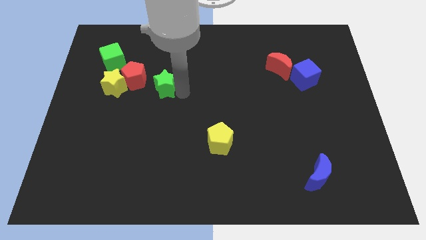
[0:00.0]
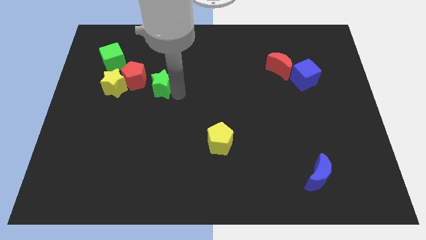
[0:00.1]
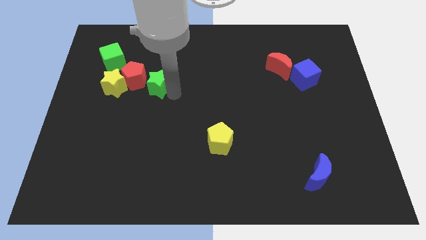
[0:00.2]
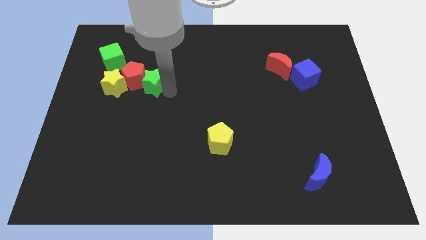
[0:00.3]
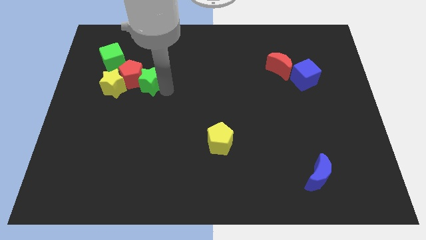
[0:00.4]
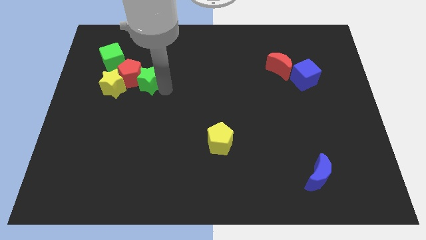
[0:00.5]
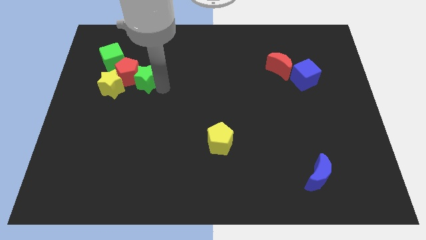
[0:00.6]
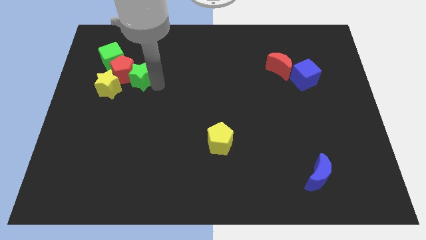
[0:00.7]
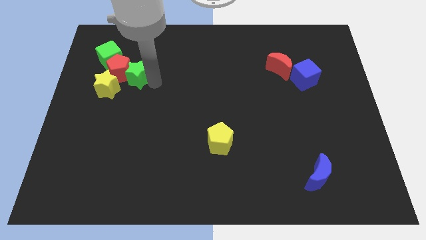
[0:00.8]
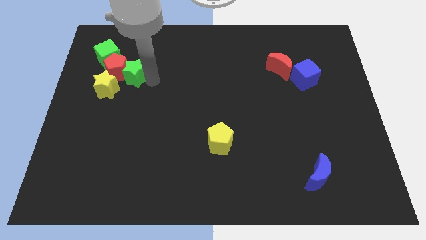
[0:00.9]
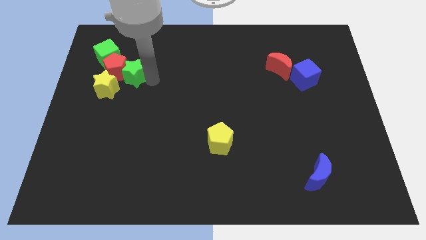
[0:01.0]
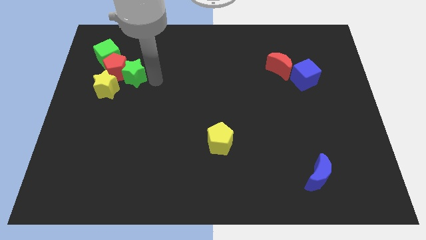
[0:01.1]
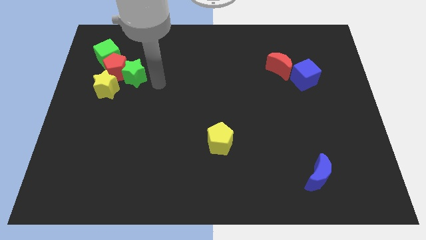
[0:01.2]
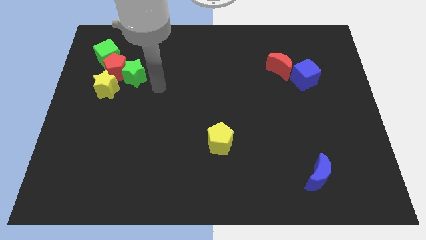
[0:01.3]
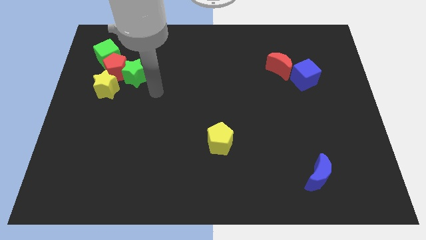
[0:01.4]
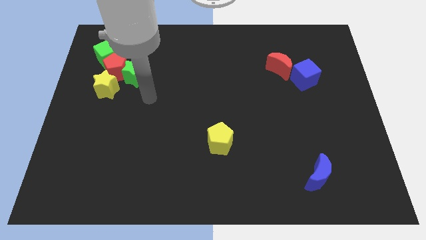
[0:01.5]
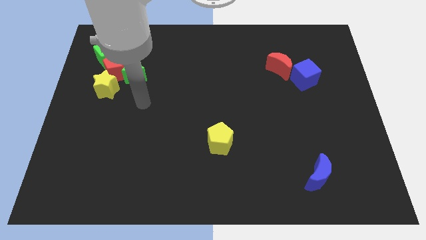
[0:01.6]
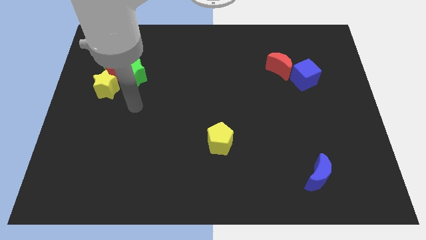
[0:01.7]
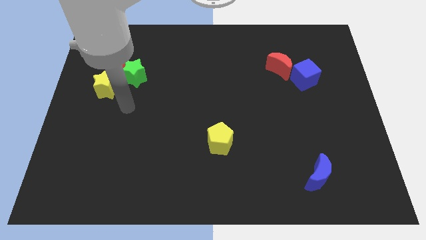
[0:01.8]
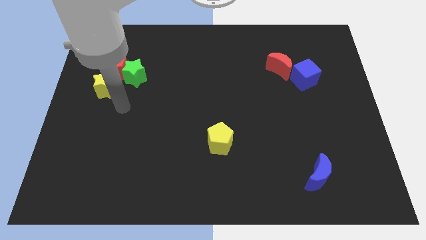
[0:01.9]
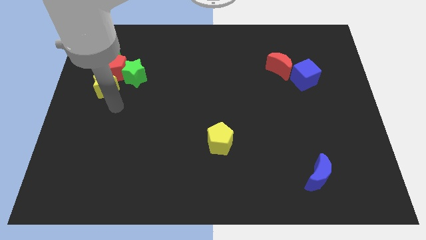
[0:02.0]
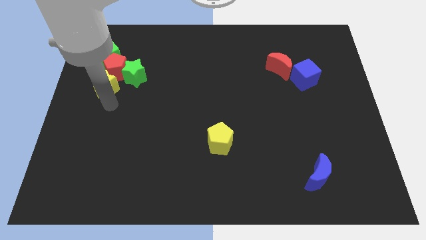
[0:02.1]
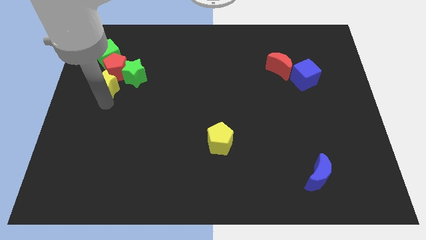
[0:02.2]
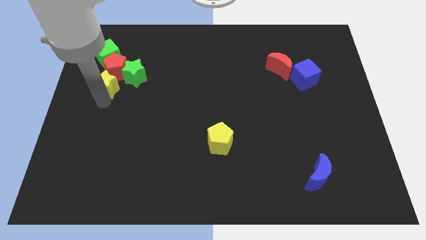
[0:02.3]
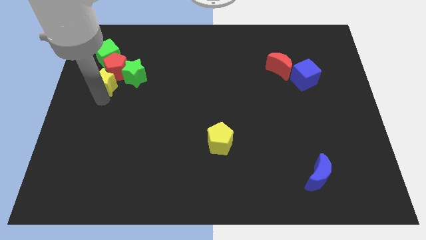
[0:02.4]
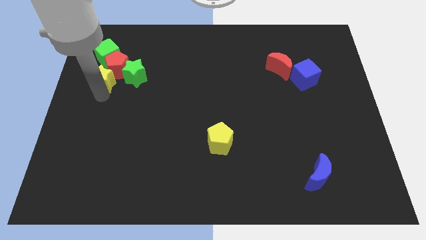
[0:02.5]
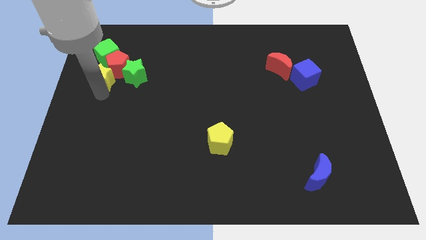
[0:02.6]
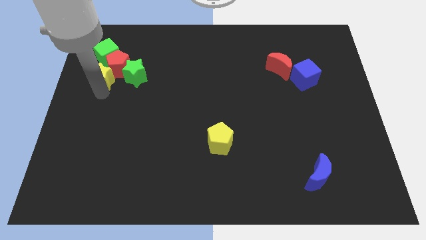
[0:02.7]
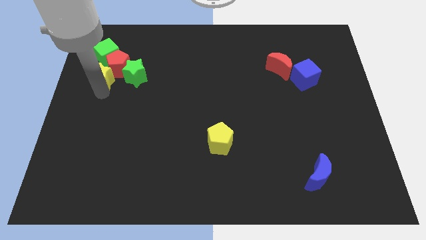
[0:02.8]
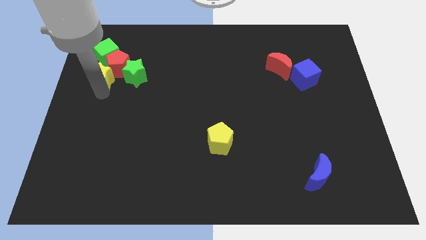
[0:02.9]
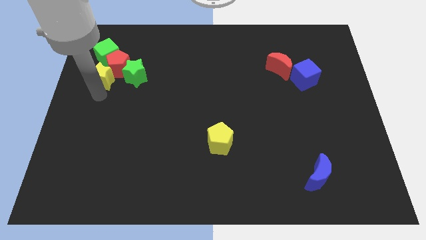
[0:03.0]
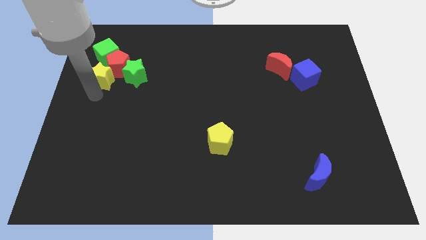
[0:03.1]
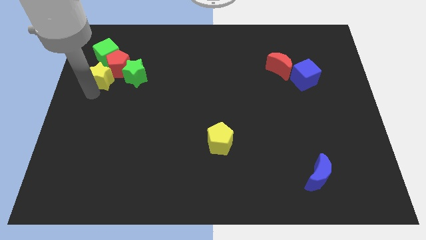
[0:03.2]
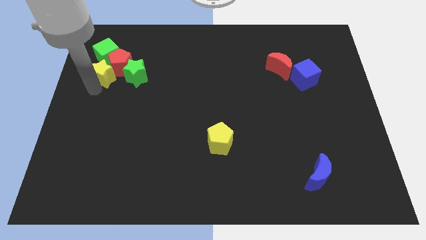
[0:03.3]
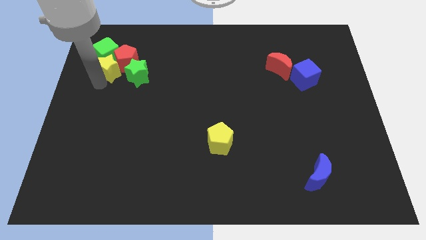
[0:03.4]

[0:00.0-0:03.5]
push the green star into the red pentagon

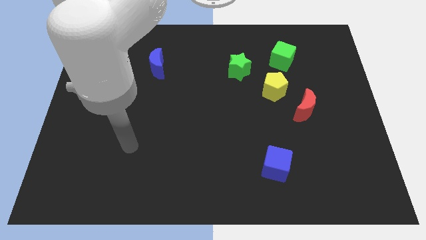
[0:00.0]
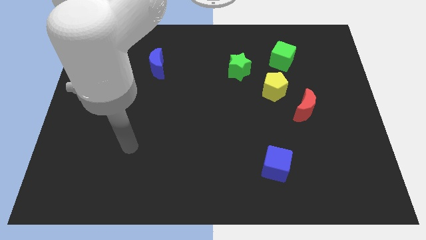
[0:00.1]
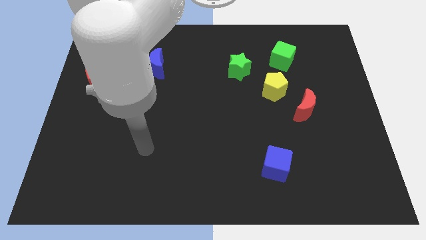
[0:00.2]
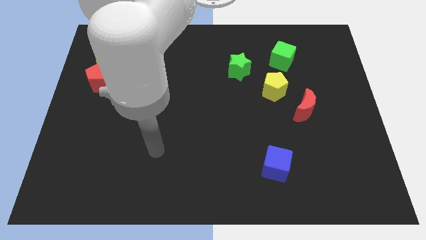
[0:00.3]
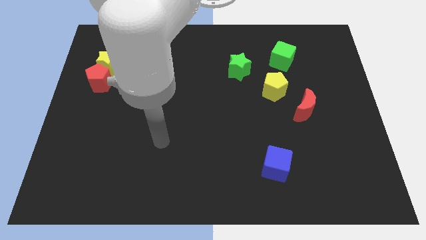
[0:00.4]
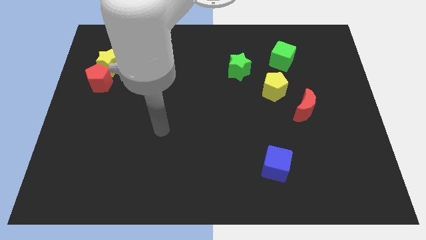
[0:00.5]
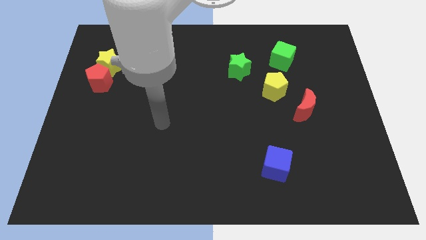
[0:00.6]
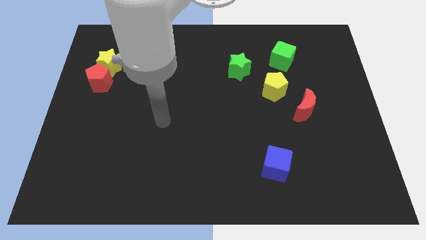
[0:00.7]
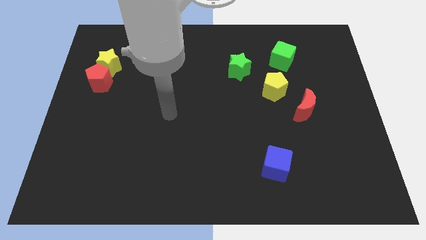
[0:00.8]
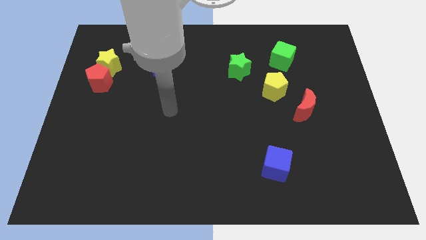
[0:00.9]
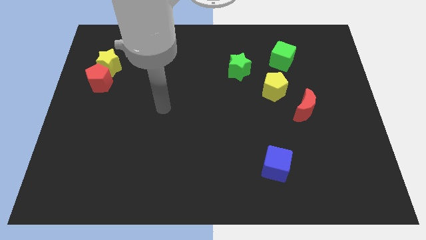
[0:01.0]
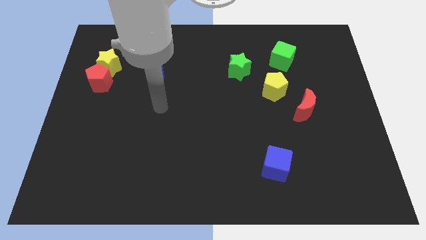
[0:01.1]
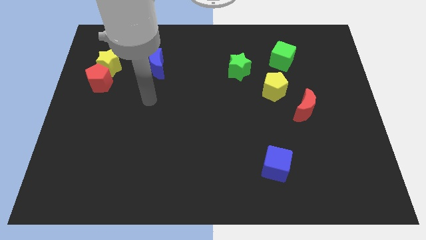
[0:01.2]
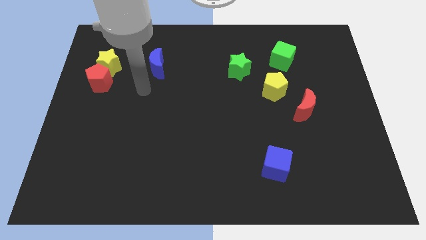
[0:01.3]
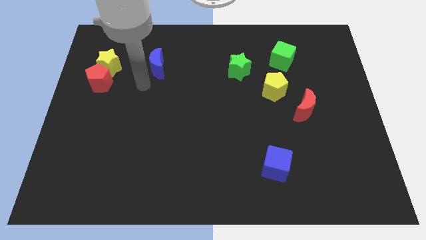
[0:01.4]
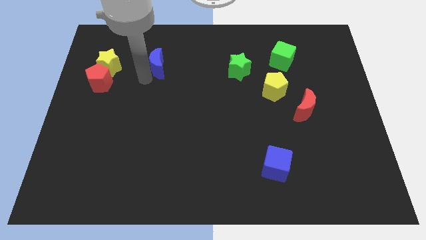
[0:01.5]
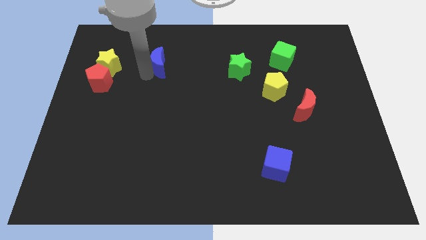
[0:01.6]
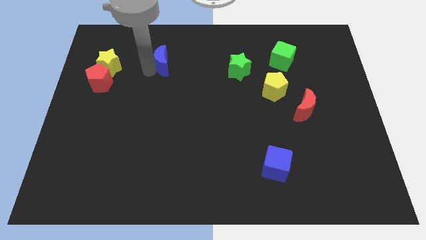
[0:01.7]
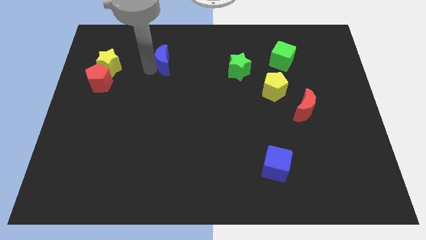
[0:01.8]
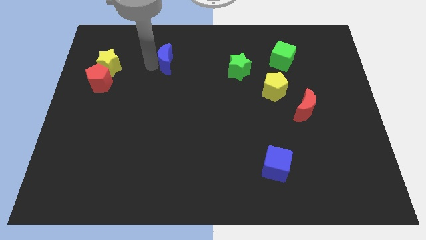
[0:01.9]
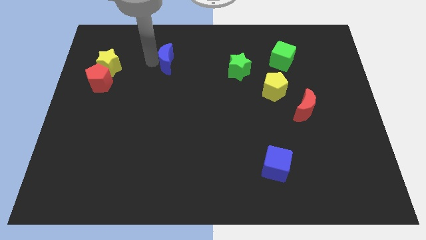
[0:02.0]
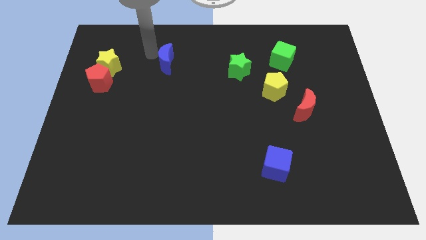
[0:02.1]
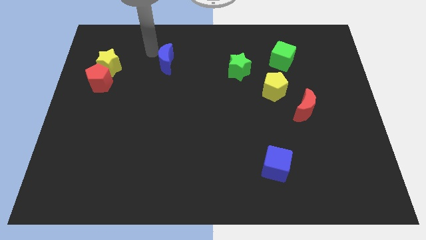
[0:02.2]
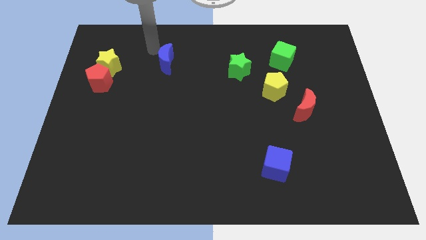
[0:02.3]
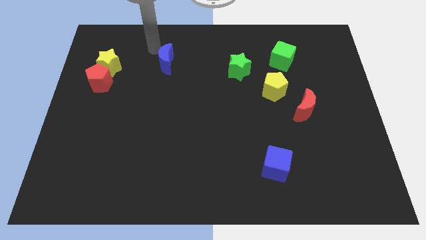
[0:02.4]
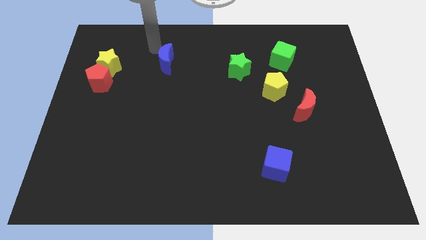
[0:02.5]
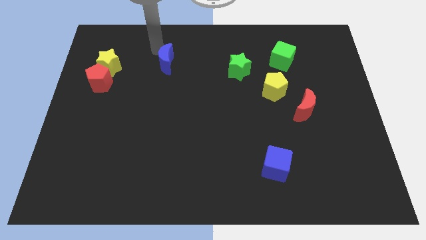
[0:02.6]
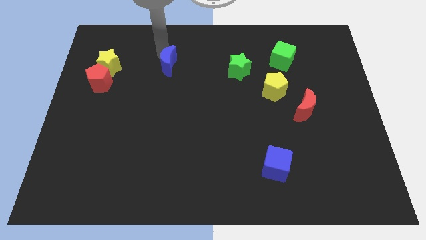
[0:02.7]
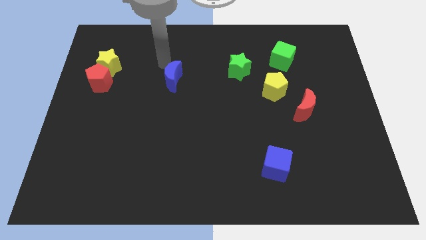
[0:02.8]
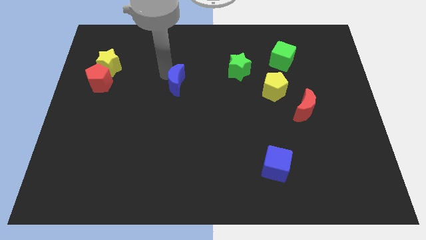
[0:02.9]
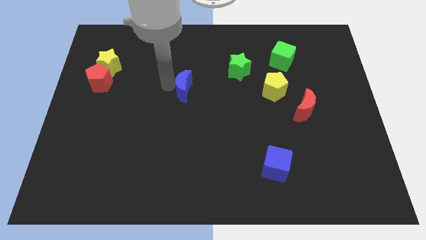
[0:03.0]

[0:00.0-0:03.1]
move blue crescent horizontal to the yellow pentagon

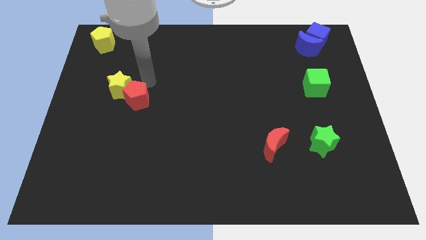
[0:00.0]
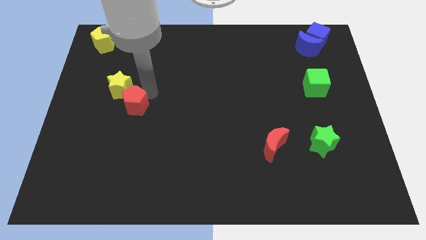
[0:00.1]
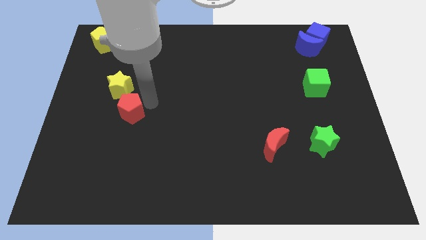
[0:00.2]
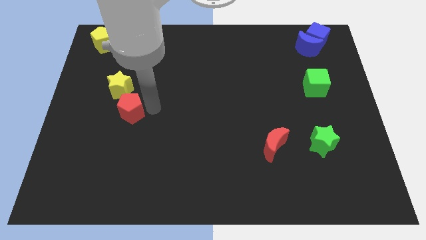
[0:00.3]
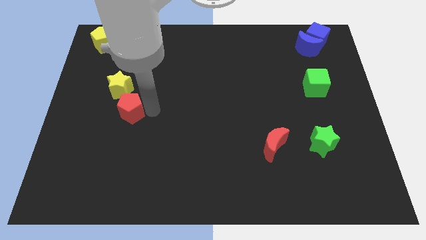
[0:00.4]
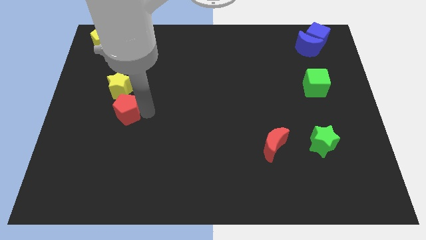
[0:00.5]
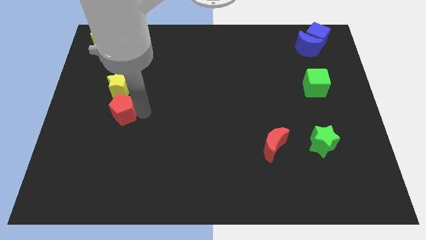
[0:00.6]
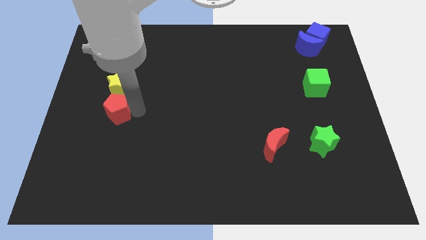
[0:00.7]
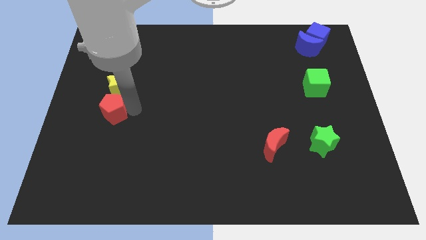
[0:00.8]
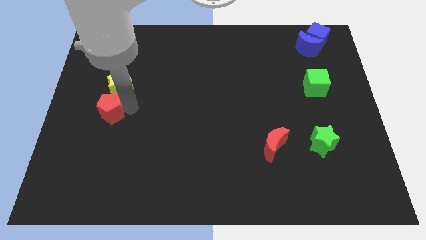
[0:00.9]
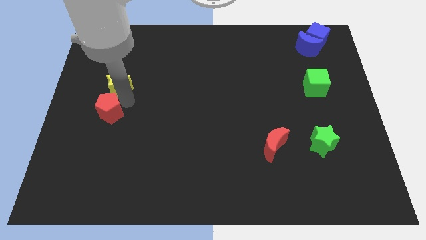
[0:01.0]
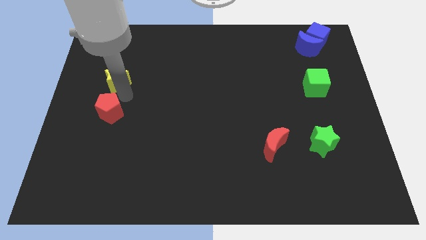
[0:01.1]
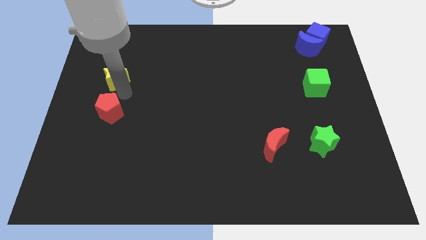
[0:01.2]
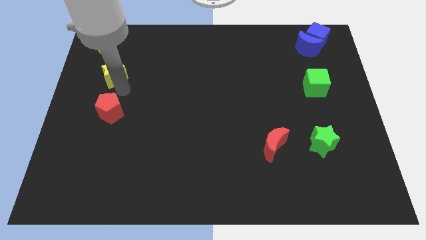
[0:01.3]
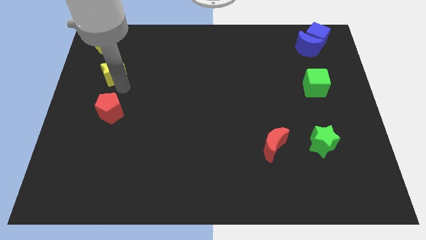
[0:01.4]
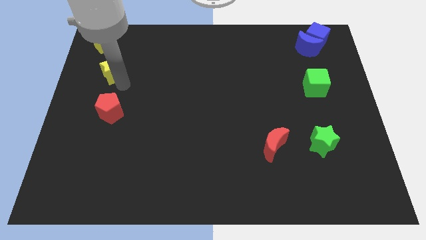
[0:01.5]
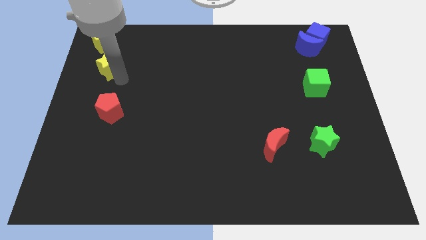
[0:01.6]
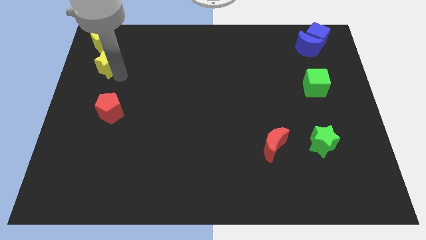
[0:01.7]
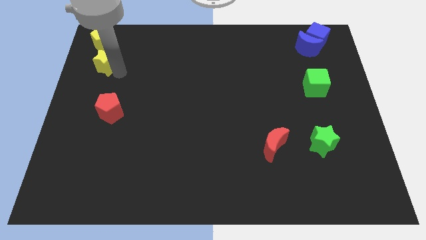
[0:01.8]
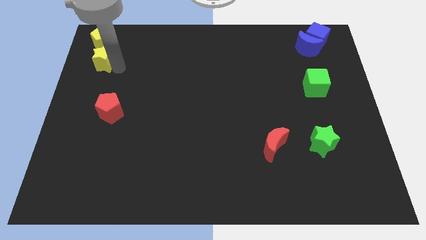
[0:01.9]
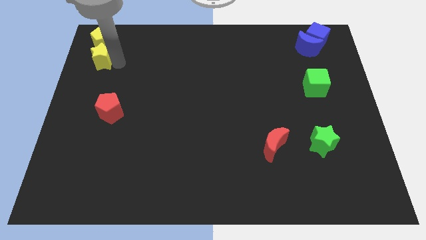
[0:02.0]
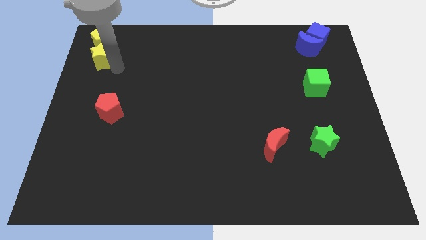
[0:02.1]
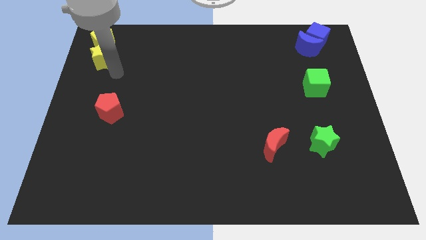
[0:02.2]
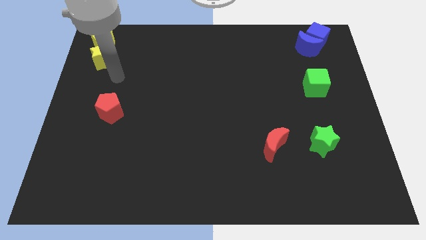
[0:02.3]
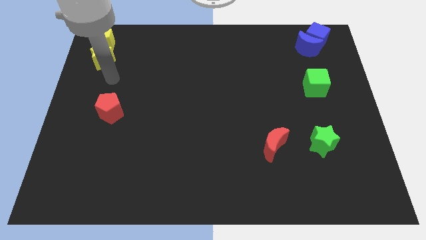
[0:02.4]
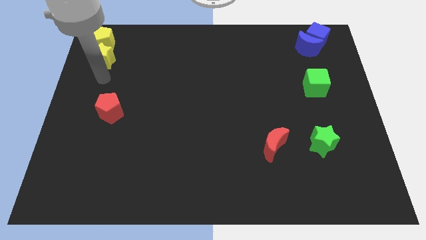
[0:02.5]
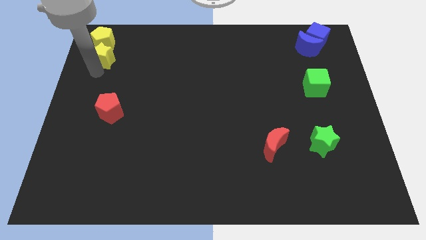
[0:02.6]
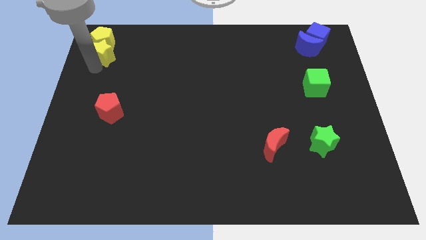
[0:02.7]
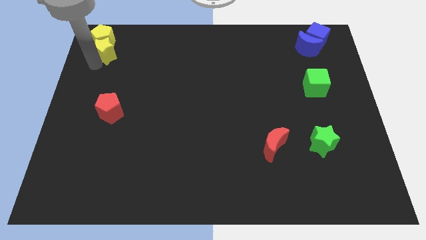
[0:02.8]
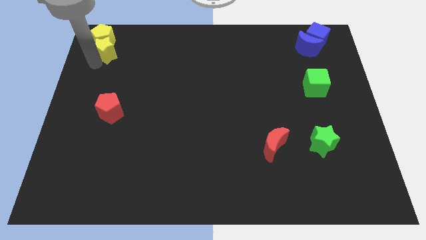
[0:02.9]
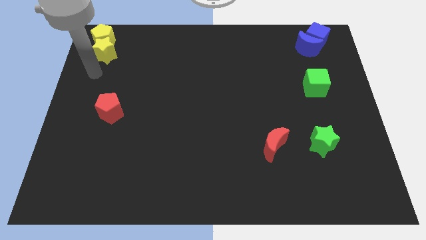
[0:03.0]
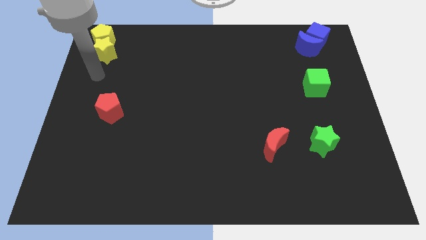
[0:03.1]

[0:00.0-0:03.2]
separate yellow star from red pentagon
